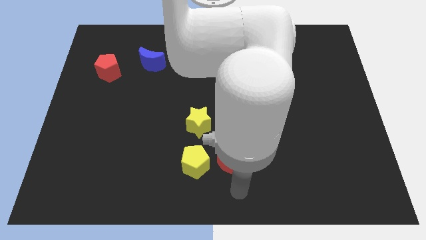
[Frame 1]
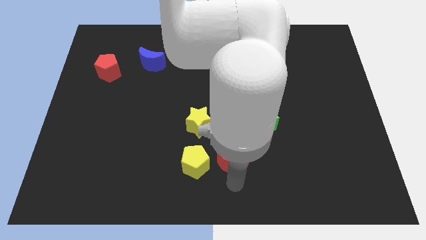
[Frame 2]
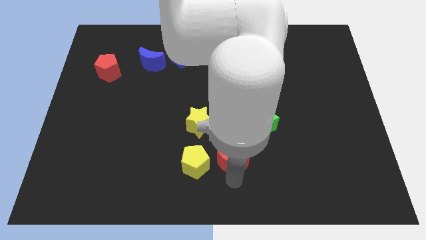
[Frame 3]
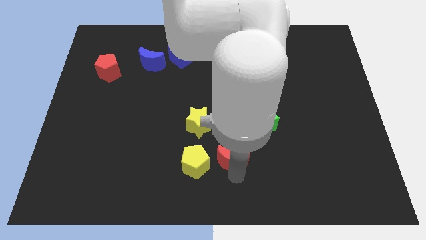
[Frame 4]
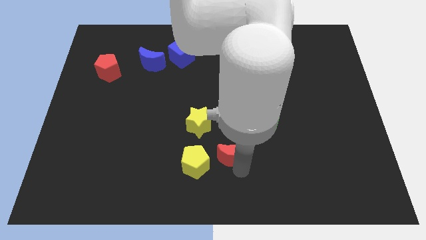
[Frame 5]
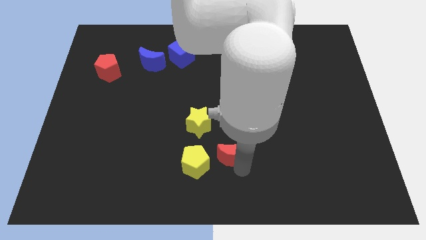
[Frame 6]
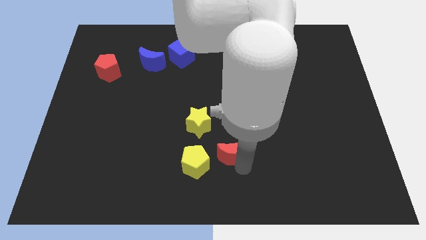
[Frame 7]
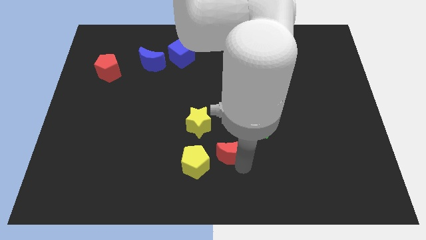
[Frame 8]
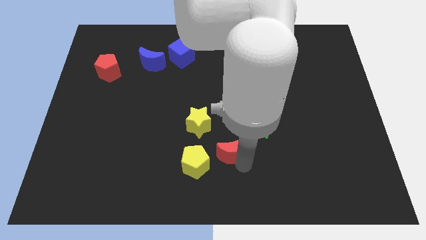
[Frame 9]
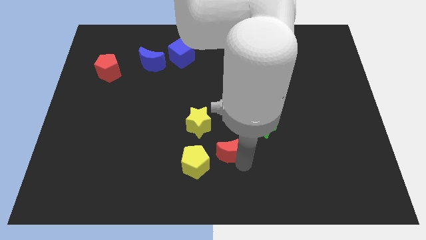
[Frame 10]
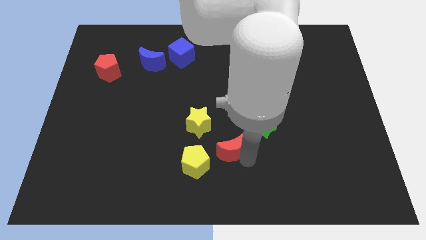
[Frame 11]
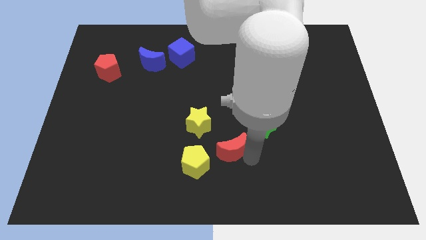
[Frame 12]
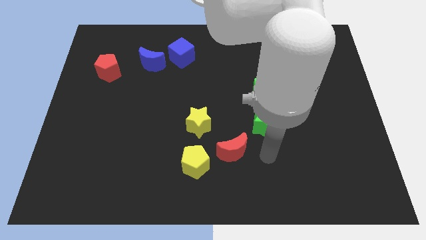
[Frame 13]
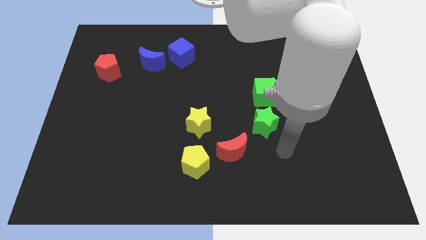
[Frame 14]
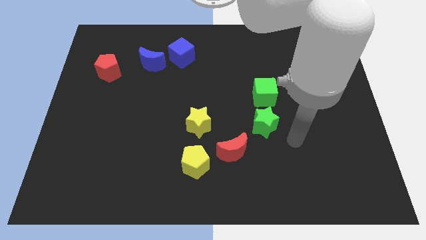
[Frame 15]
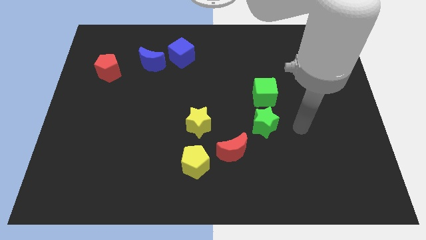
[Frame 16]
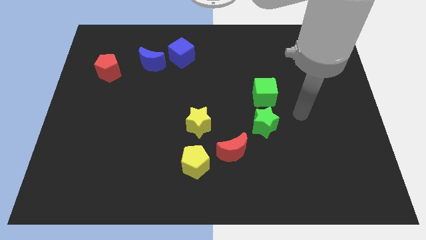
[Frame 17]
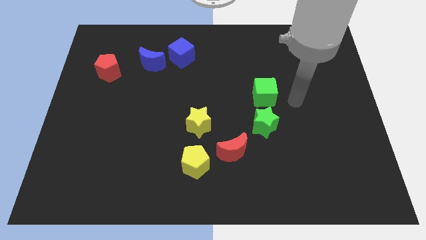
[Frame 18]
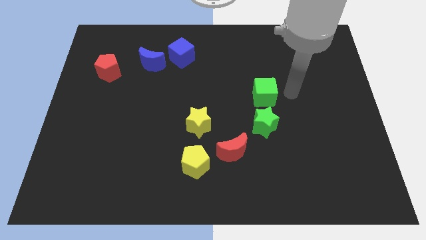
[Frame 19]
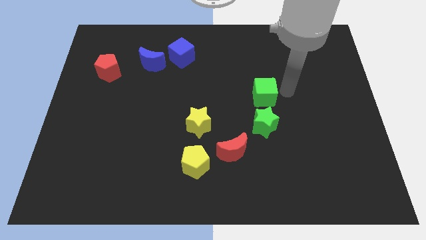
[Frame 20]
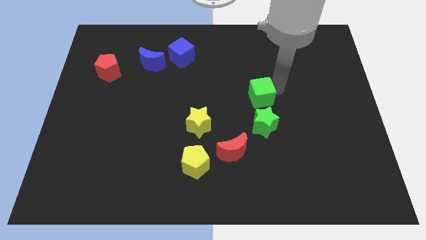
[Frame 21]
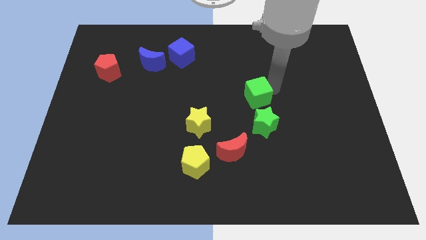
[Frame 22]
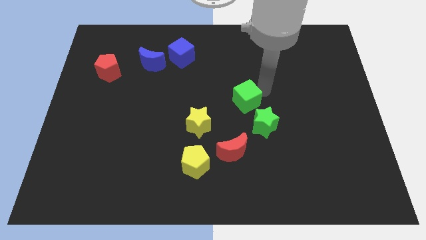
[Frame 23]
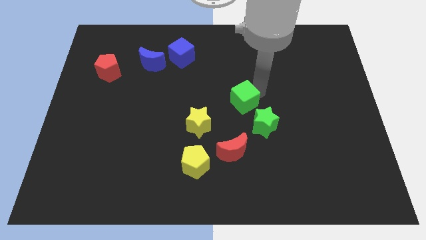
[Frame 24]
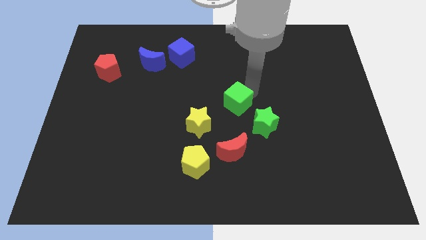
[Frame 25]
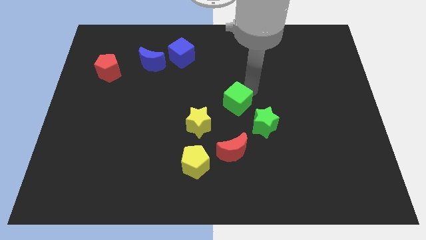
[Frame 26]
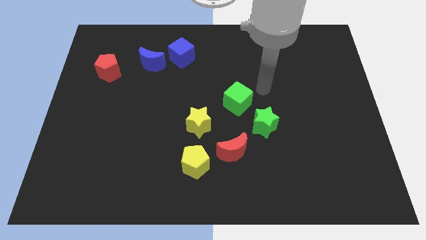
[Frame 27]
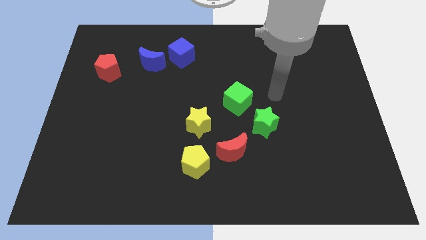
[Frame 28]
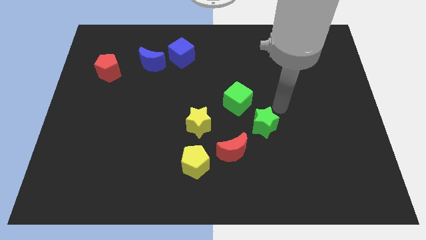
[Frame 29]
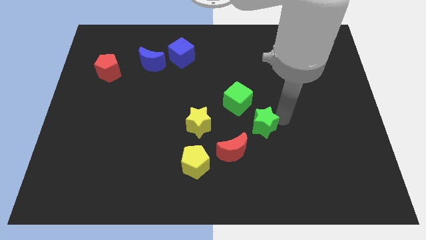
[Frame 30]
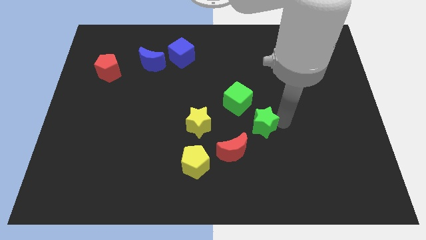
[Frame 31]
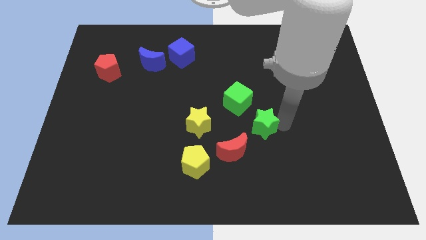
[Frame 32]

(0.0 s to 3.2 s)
slightly move the green cube left to the board

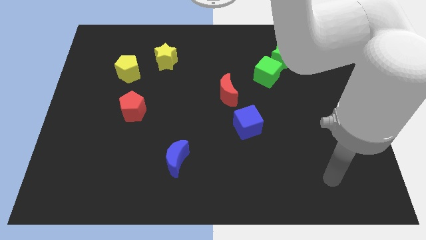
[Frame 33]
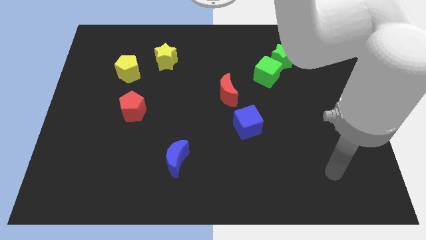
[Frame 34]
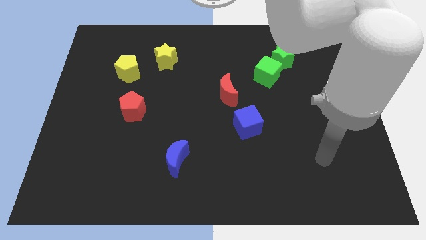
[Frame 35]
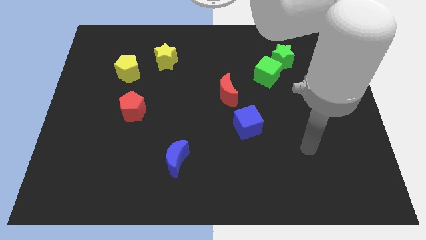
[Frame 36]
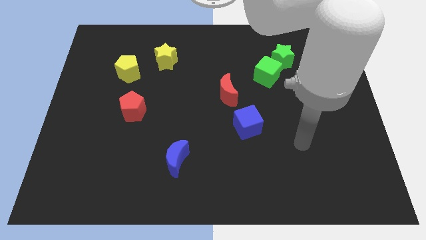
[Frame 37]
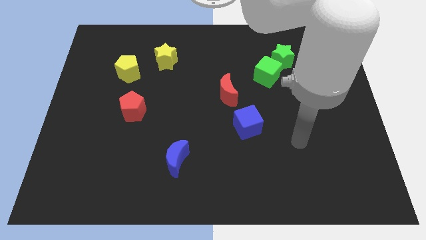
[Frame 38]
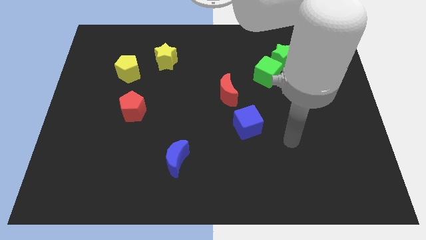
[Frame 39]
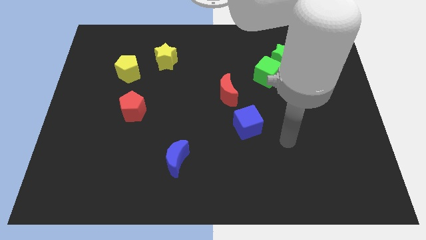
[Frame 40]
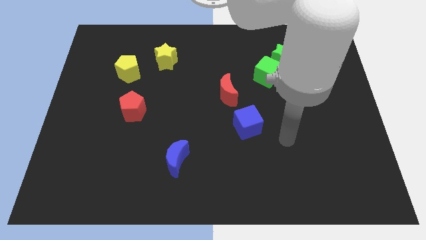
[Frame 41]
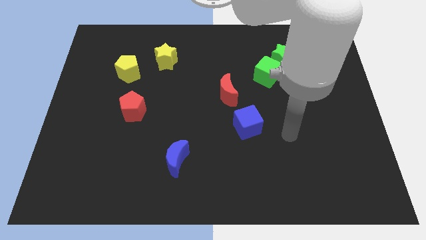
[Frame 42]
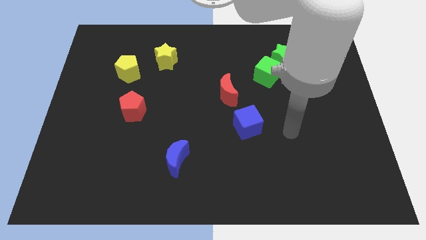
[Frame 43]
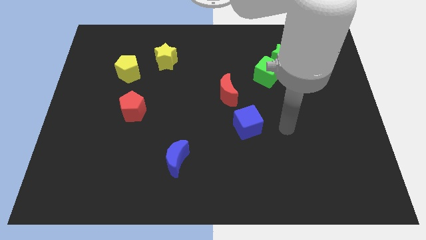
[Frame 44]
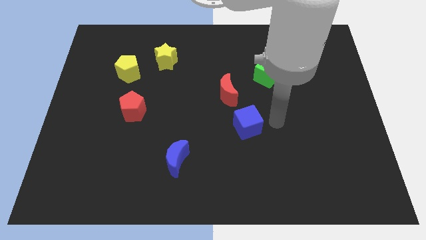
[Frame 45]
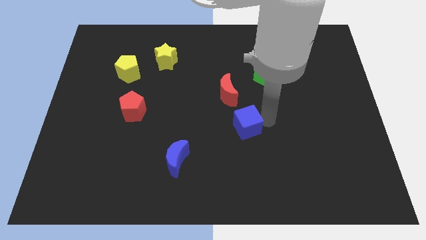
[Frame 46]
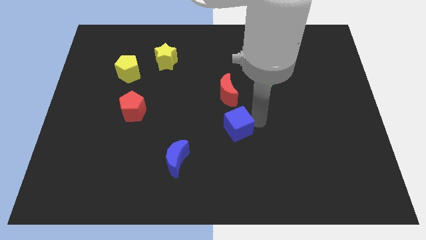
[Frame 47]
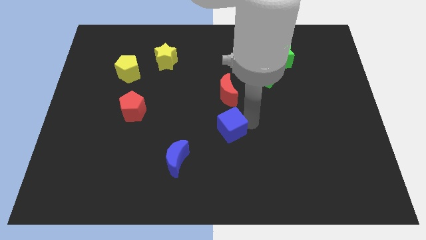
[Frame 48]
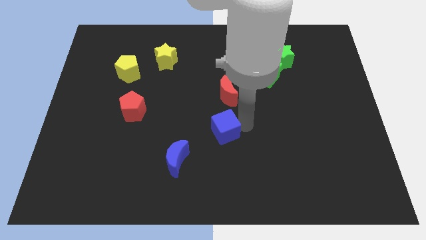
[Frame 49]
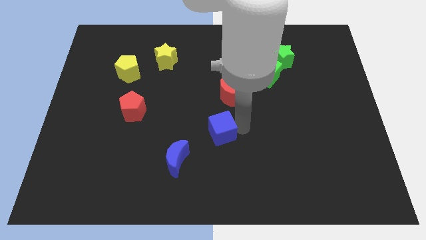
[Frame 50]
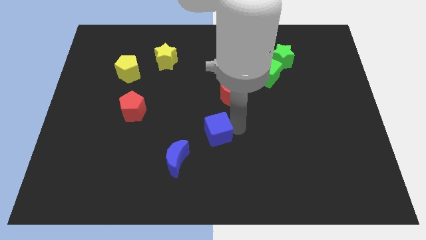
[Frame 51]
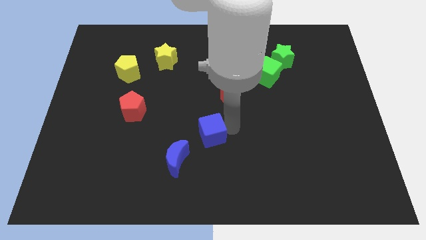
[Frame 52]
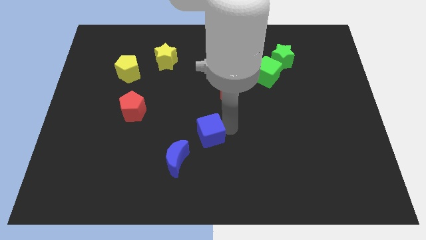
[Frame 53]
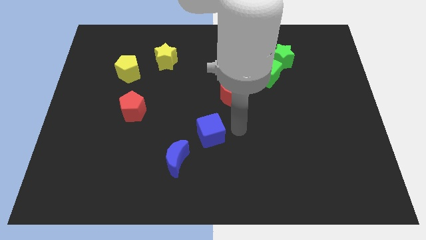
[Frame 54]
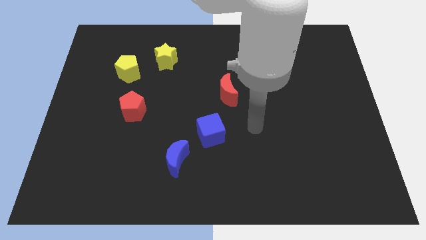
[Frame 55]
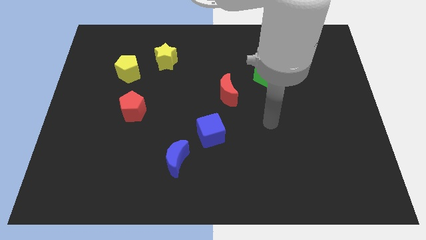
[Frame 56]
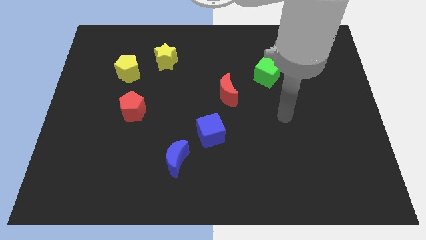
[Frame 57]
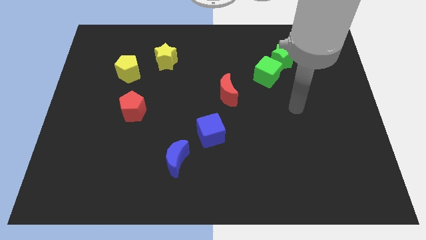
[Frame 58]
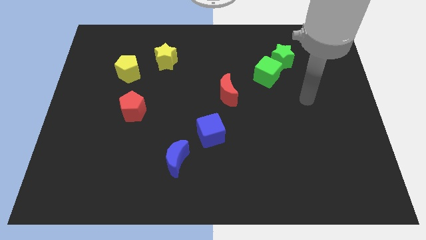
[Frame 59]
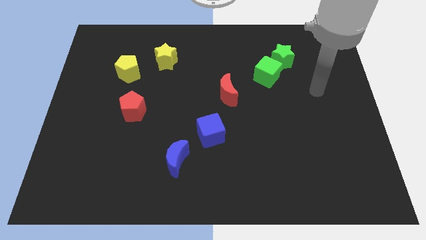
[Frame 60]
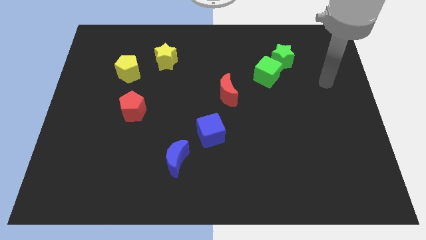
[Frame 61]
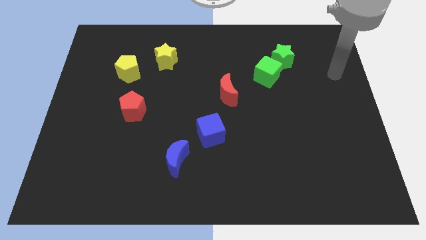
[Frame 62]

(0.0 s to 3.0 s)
move blue cube close to the blue moon

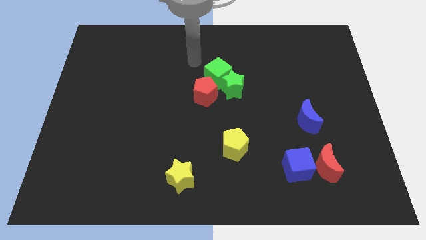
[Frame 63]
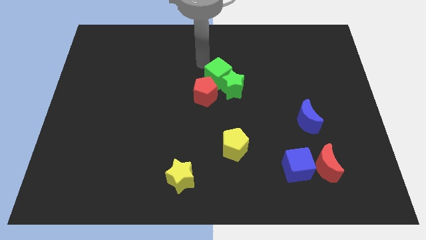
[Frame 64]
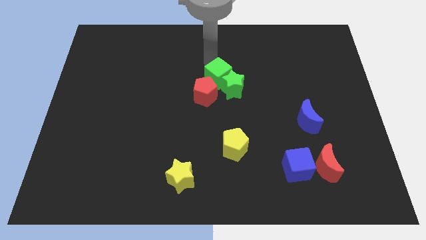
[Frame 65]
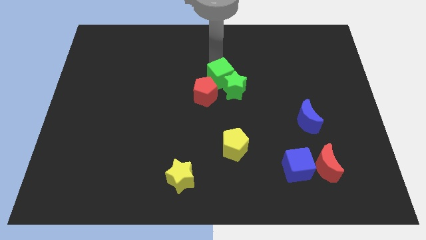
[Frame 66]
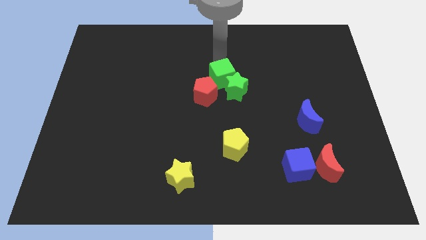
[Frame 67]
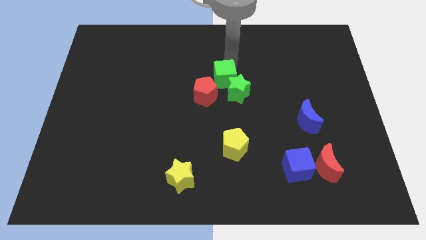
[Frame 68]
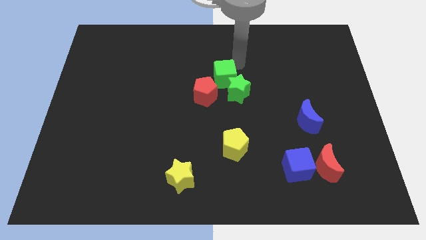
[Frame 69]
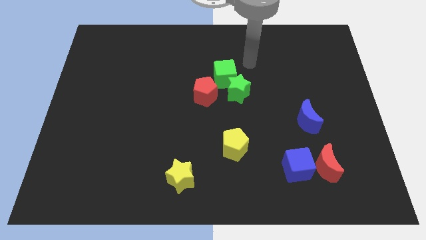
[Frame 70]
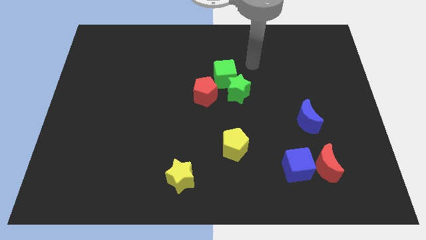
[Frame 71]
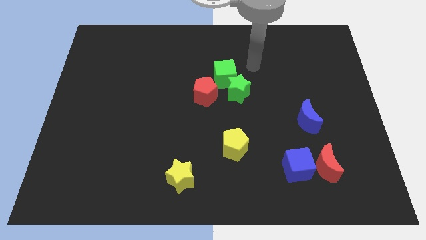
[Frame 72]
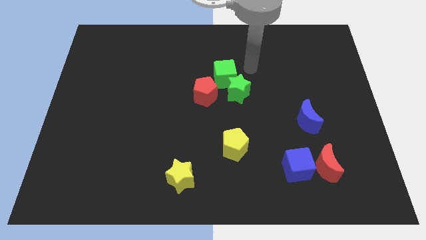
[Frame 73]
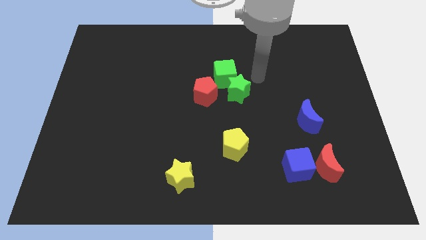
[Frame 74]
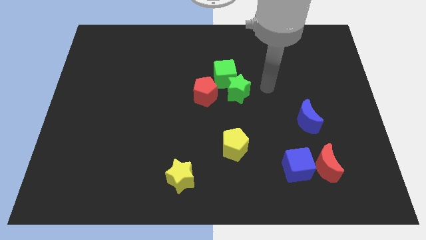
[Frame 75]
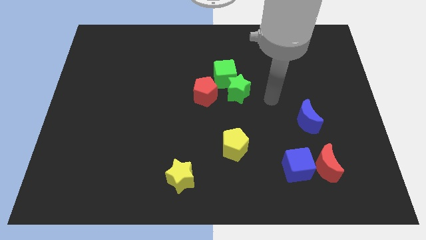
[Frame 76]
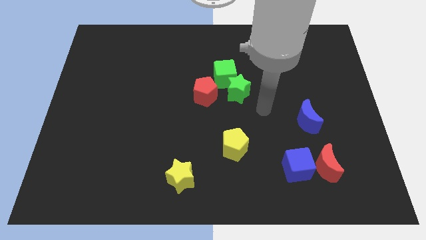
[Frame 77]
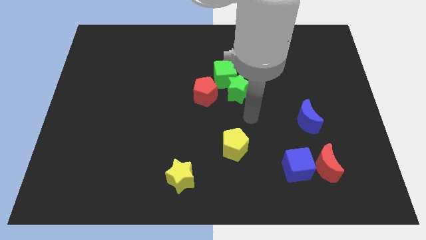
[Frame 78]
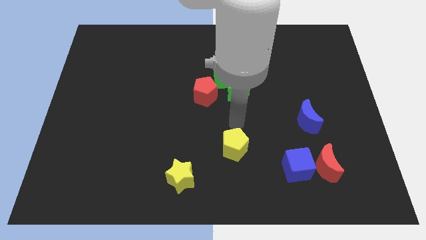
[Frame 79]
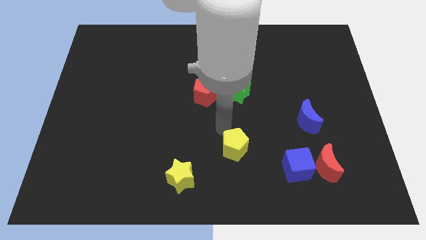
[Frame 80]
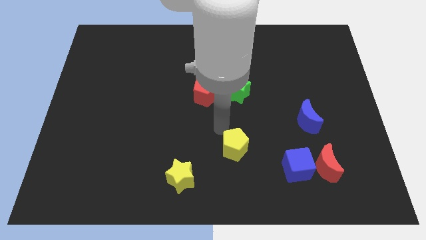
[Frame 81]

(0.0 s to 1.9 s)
move your arm towards the yellow pentagon

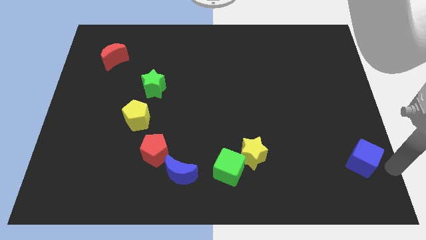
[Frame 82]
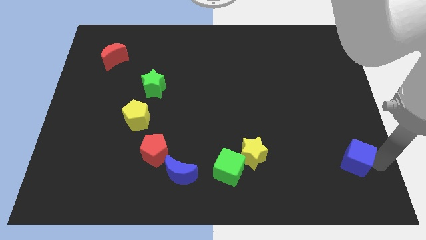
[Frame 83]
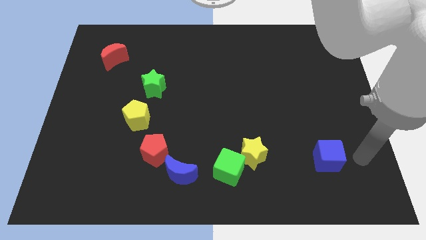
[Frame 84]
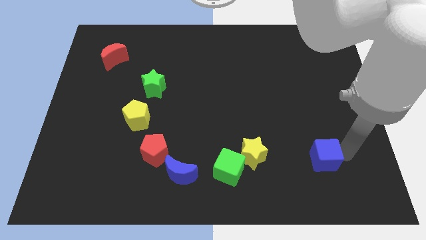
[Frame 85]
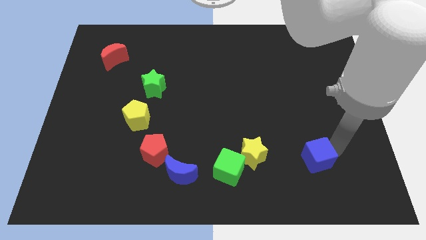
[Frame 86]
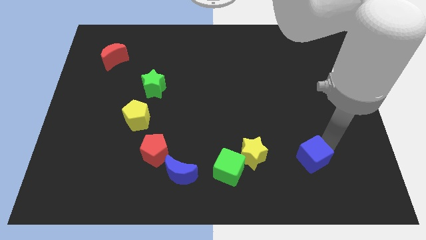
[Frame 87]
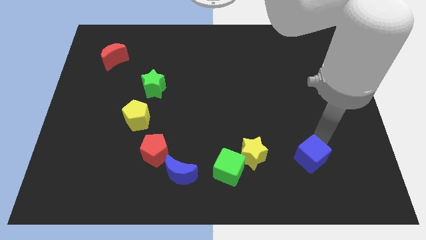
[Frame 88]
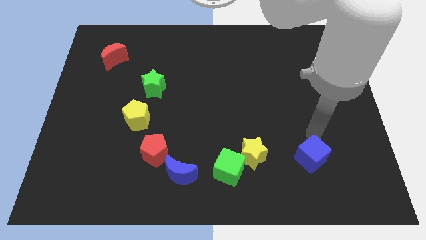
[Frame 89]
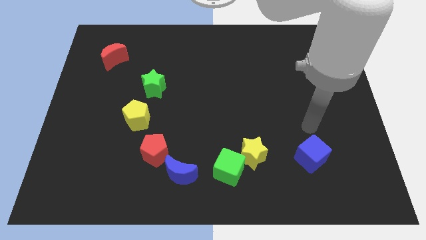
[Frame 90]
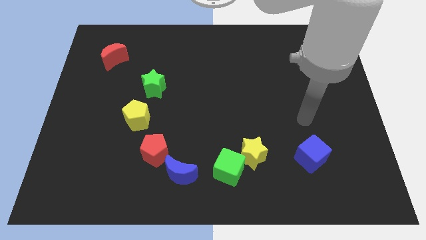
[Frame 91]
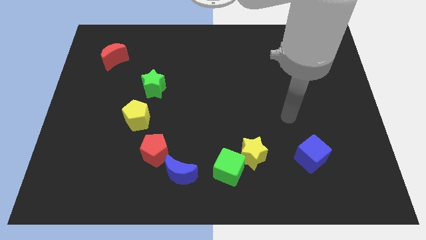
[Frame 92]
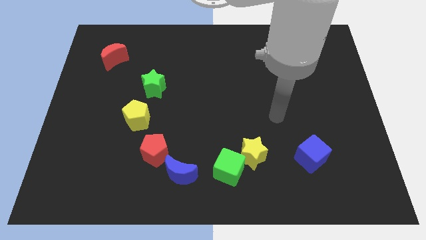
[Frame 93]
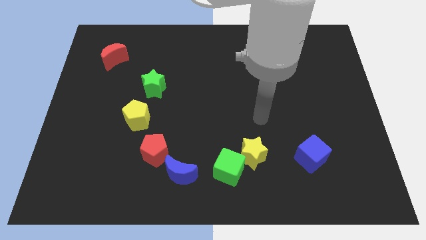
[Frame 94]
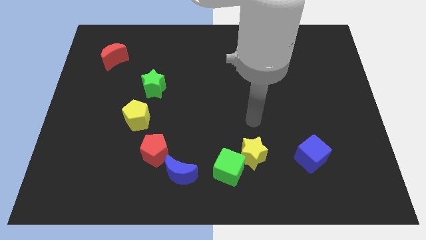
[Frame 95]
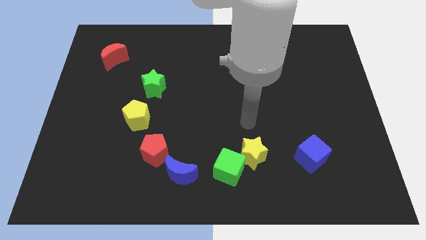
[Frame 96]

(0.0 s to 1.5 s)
place the blue cube to the right side of the yellow star
